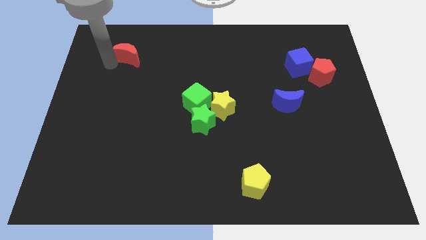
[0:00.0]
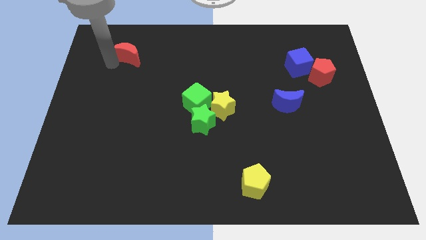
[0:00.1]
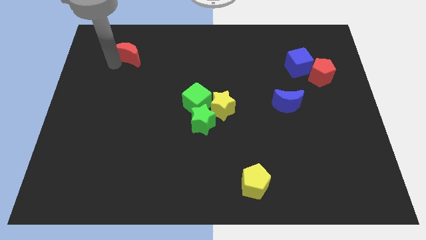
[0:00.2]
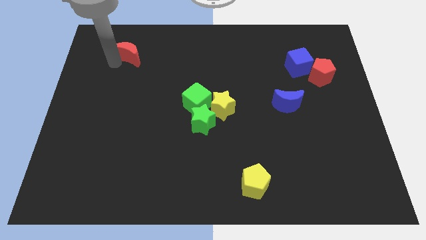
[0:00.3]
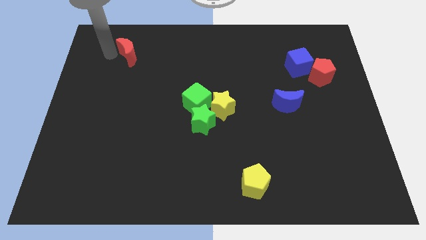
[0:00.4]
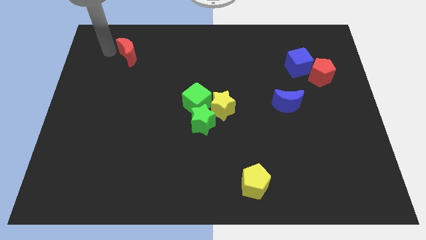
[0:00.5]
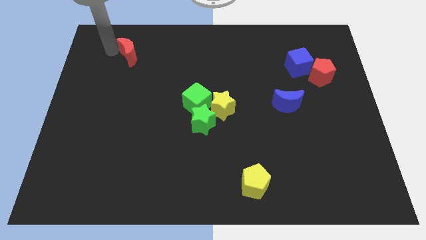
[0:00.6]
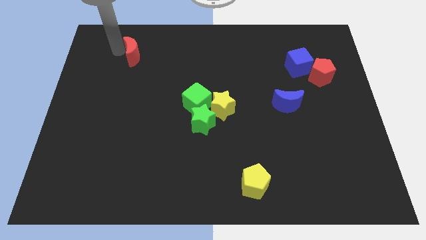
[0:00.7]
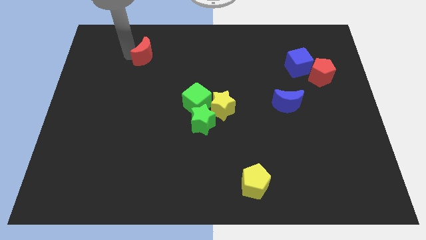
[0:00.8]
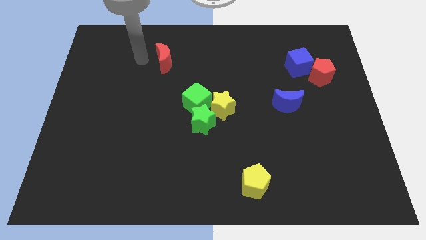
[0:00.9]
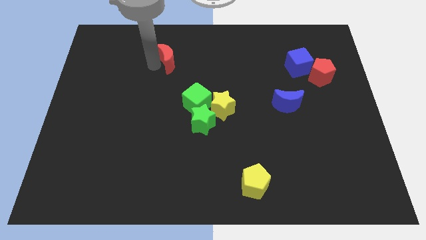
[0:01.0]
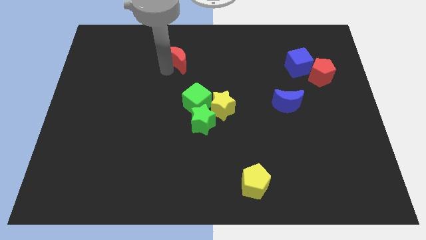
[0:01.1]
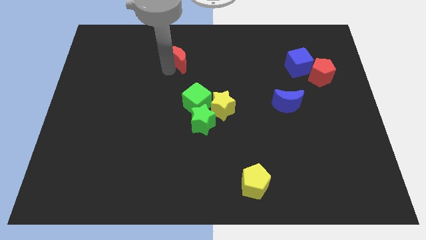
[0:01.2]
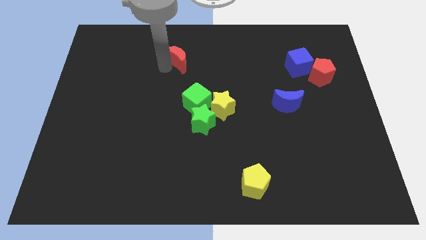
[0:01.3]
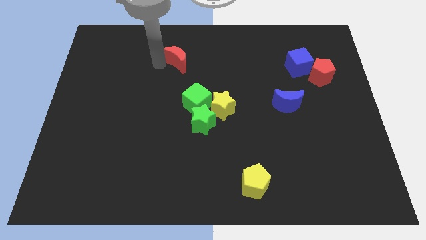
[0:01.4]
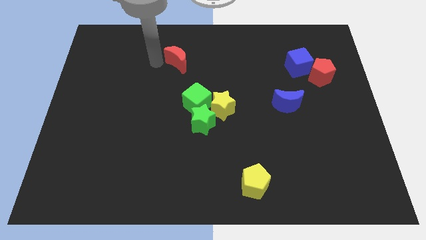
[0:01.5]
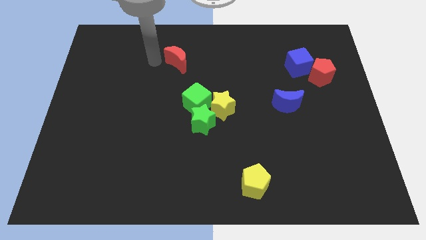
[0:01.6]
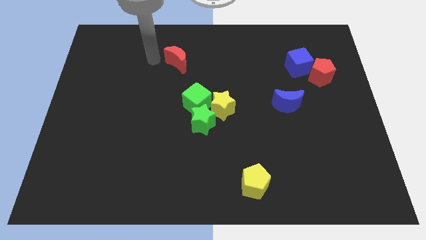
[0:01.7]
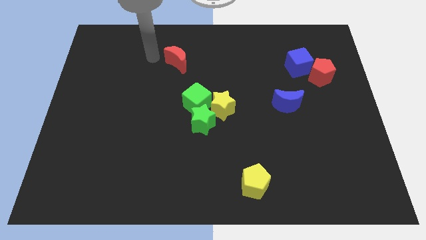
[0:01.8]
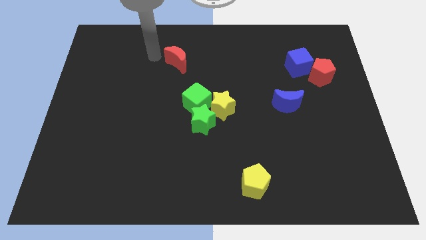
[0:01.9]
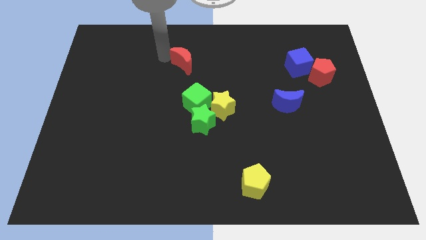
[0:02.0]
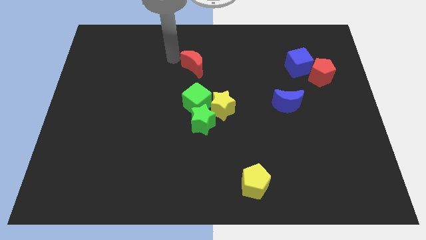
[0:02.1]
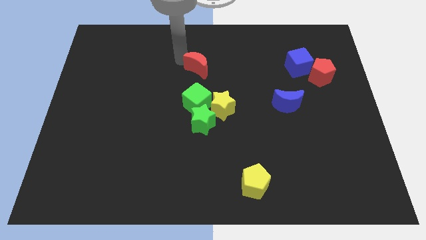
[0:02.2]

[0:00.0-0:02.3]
push red moon above green cube

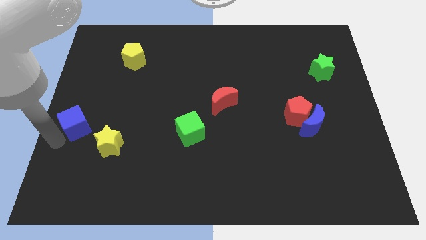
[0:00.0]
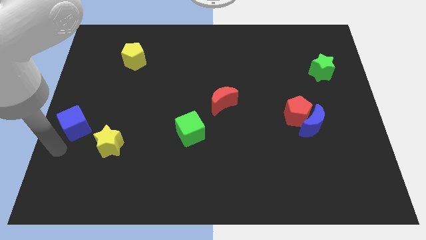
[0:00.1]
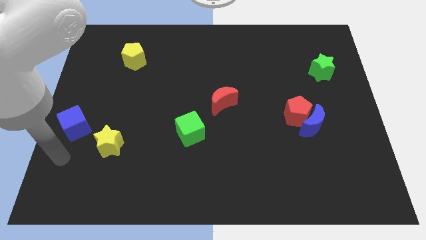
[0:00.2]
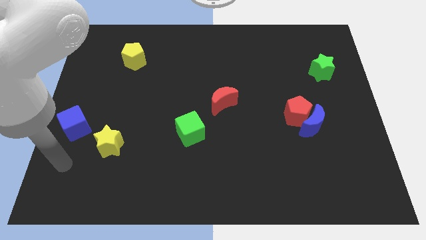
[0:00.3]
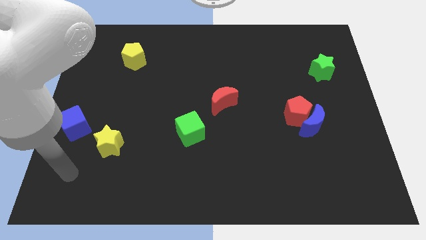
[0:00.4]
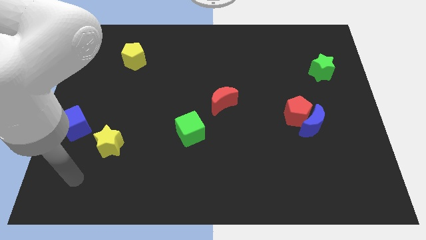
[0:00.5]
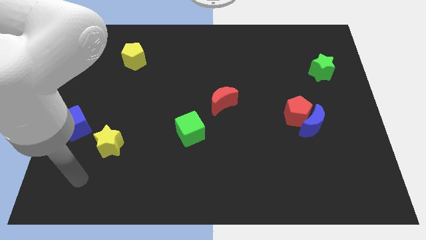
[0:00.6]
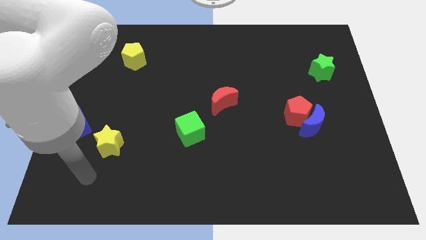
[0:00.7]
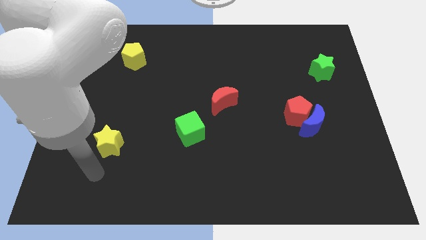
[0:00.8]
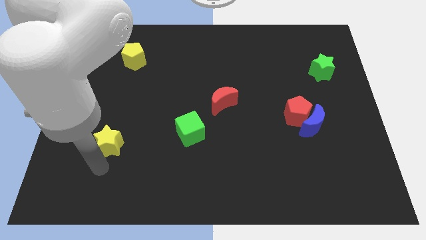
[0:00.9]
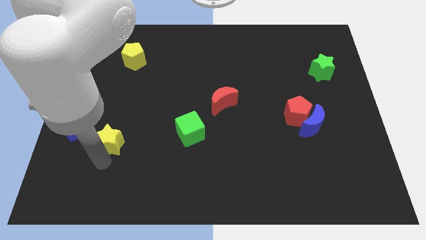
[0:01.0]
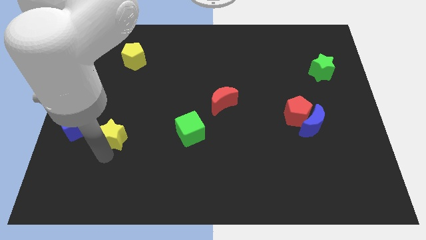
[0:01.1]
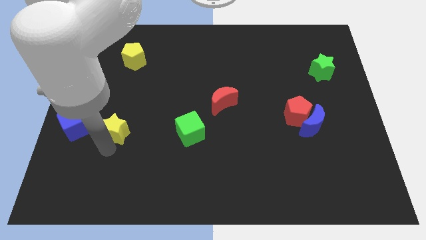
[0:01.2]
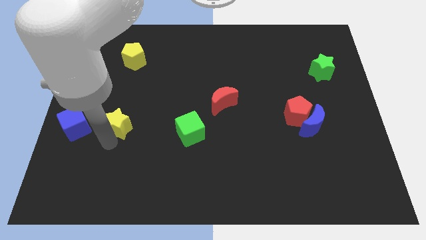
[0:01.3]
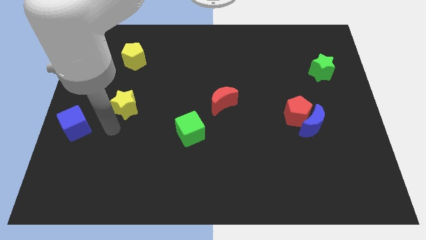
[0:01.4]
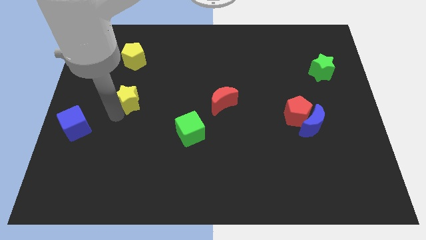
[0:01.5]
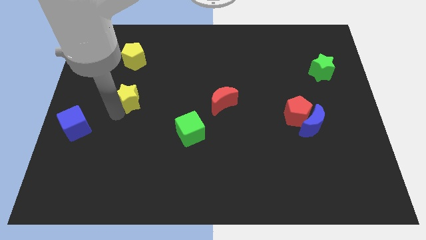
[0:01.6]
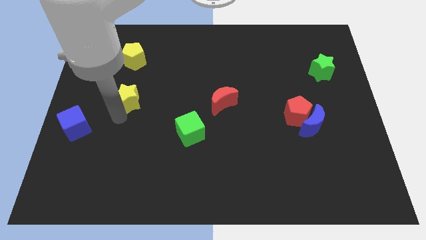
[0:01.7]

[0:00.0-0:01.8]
move the yellow star towards the yellow pentagon

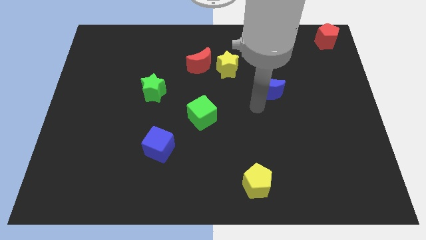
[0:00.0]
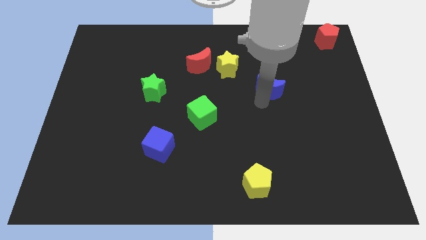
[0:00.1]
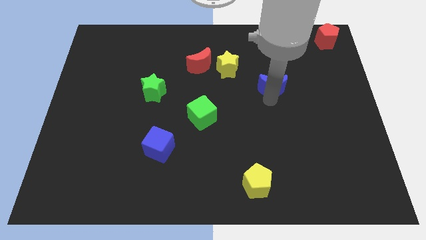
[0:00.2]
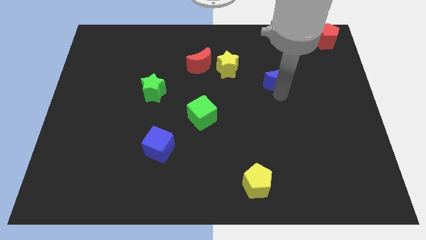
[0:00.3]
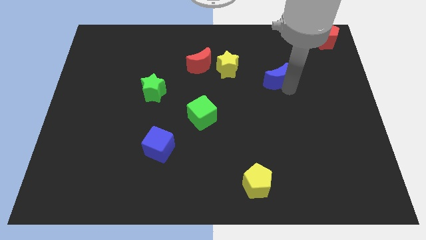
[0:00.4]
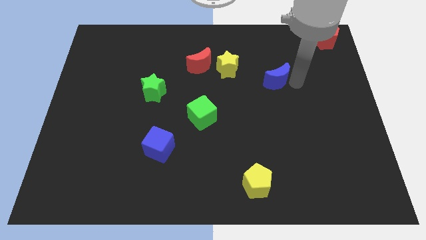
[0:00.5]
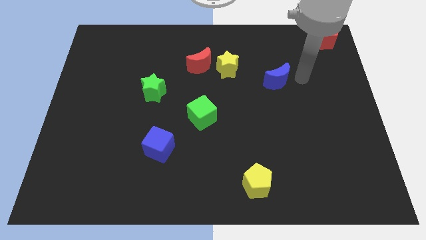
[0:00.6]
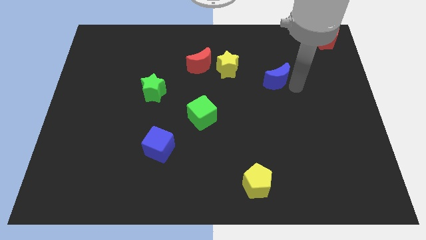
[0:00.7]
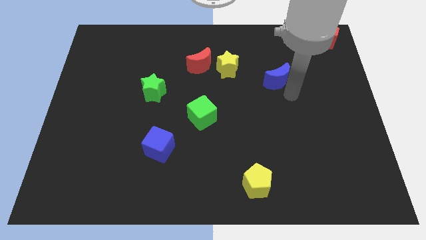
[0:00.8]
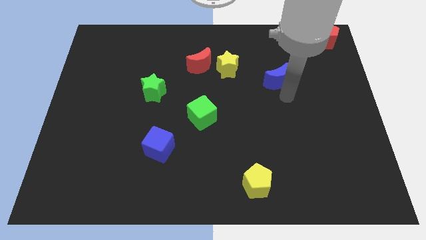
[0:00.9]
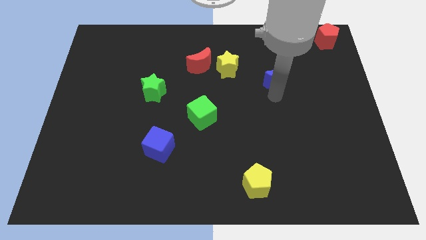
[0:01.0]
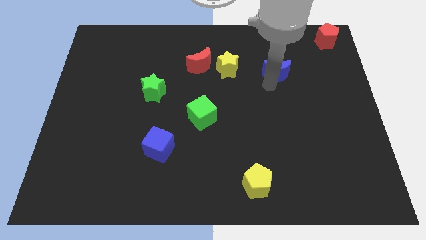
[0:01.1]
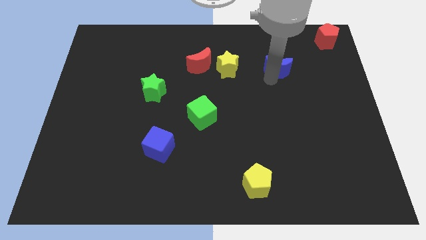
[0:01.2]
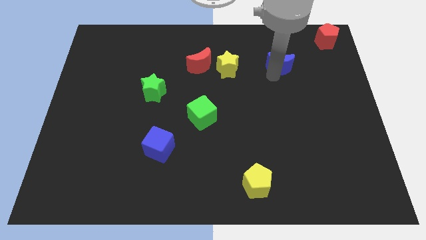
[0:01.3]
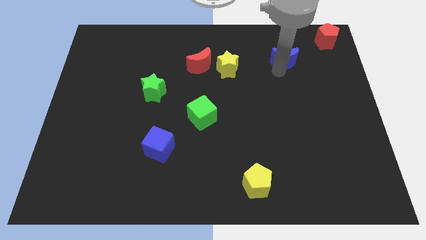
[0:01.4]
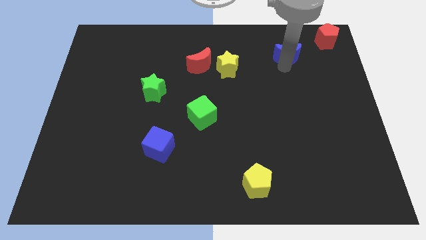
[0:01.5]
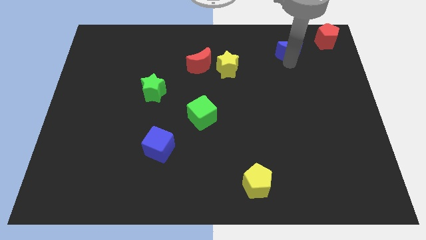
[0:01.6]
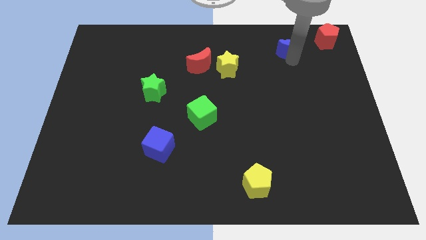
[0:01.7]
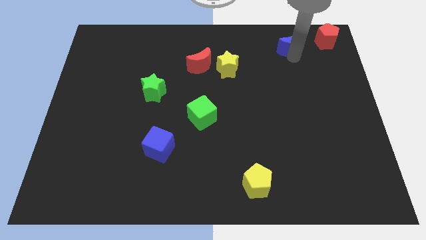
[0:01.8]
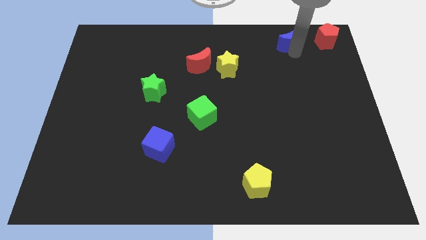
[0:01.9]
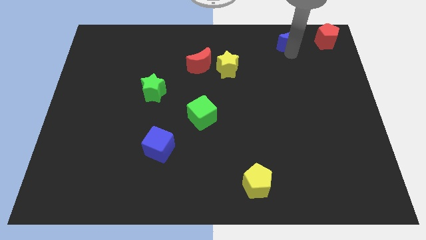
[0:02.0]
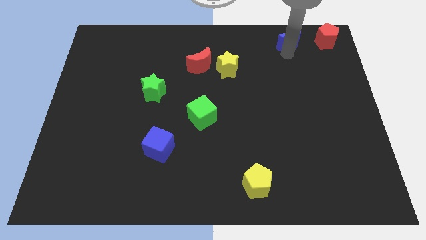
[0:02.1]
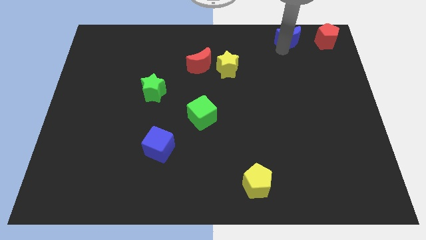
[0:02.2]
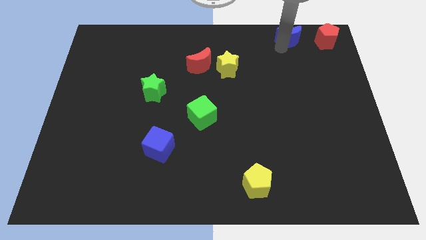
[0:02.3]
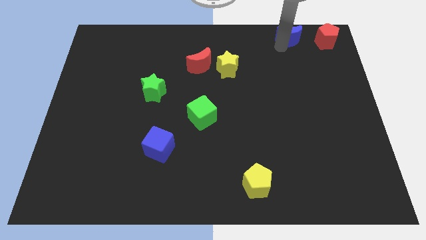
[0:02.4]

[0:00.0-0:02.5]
place blue crescent beside red pentagon

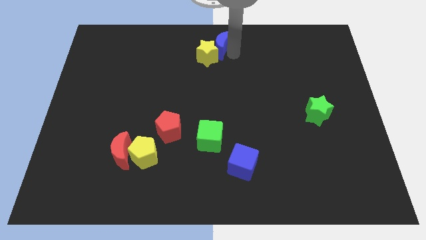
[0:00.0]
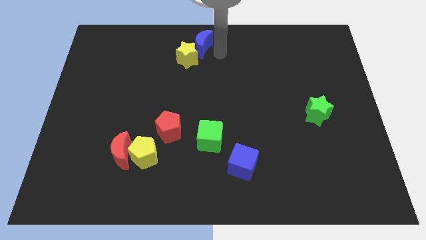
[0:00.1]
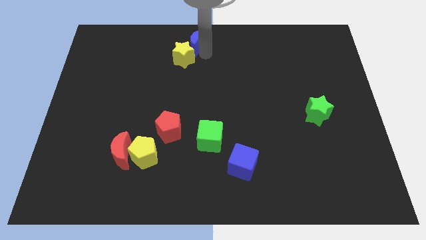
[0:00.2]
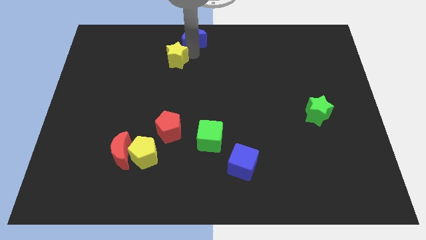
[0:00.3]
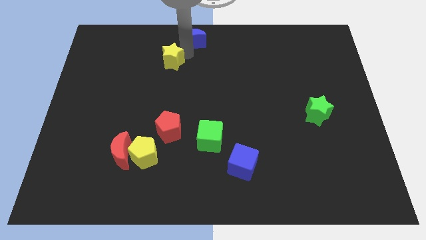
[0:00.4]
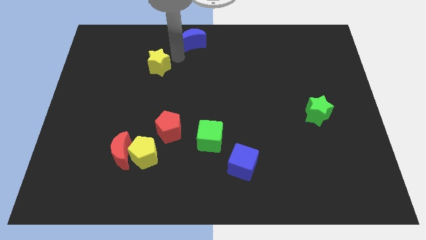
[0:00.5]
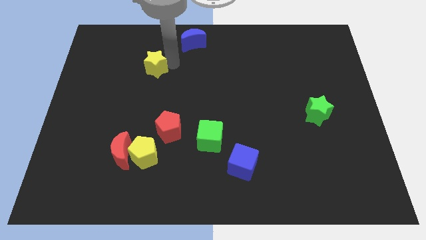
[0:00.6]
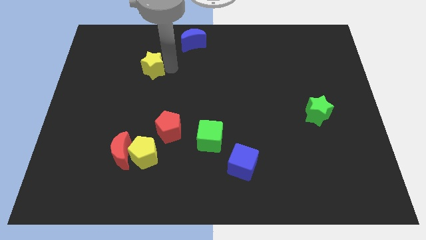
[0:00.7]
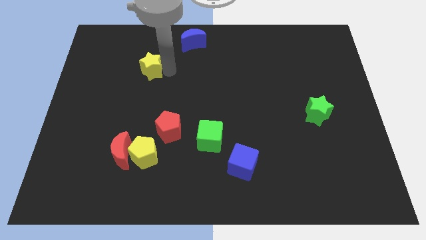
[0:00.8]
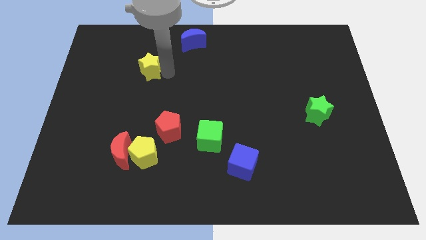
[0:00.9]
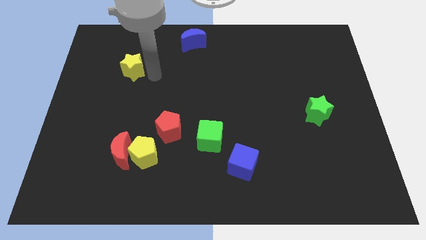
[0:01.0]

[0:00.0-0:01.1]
separate yellow star from blue moon

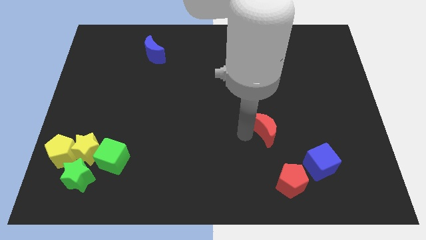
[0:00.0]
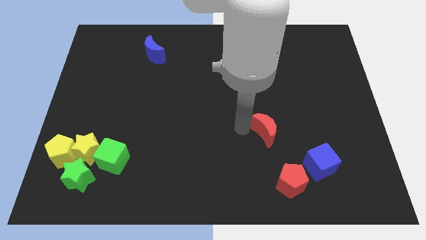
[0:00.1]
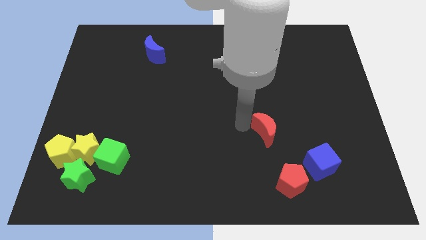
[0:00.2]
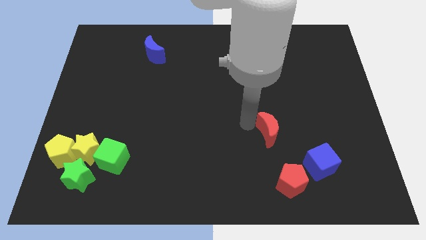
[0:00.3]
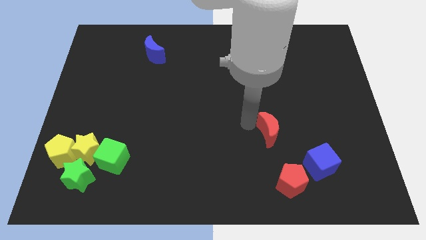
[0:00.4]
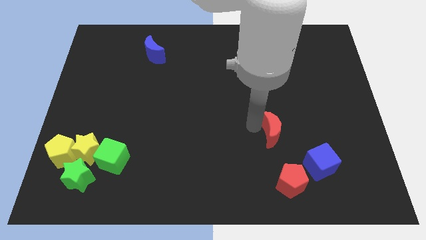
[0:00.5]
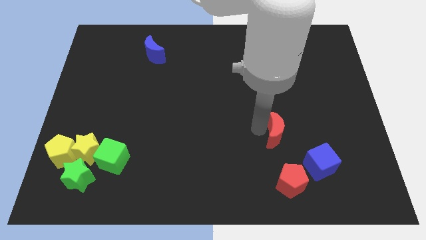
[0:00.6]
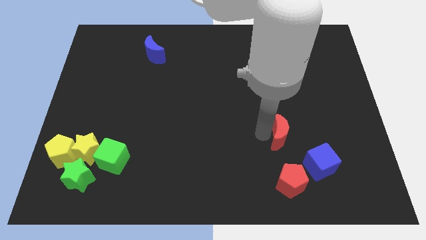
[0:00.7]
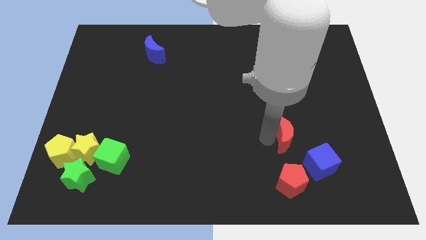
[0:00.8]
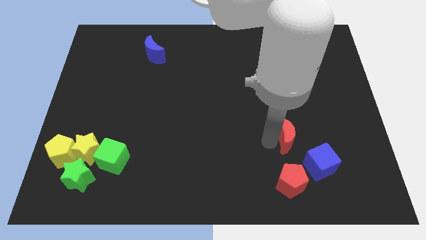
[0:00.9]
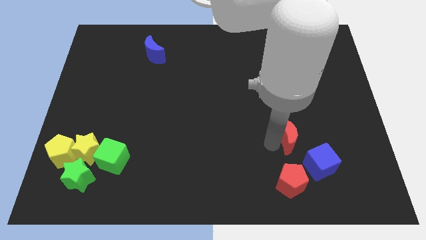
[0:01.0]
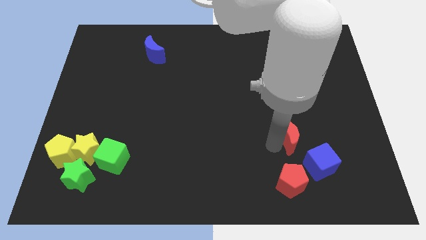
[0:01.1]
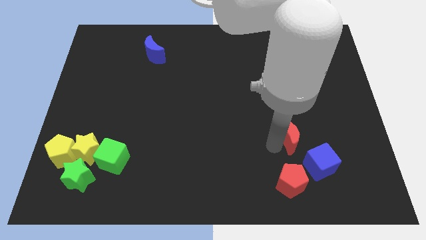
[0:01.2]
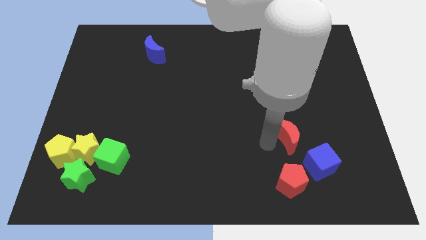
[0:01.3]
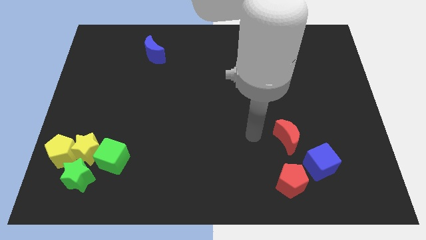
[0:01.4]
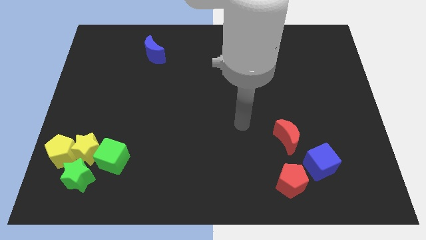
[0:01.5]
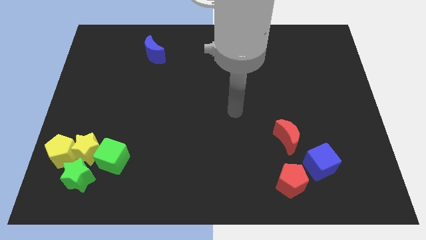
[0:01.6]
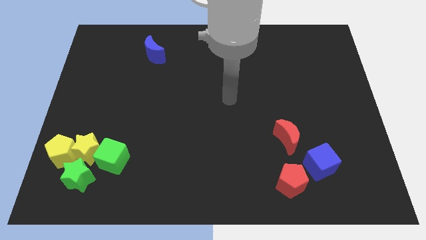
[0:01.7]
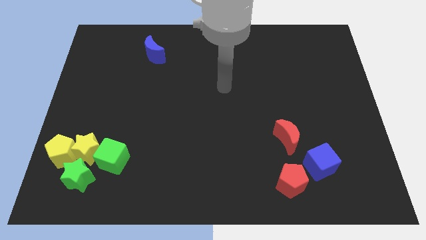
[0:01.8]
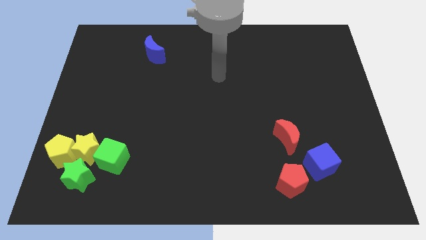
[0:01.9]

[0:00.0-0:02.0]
place the red crescent above the red pentagon
